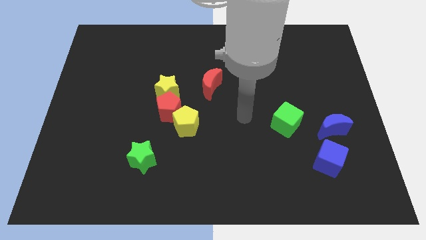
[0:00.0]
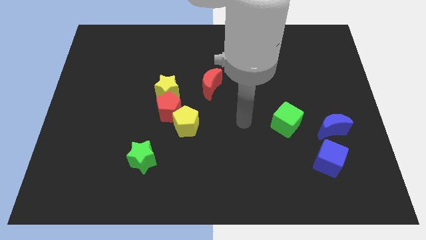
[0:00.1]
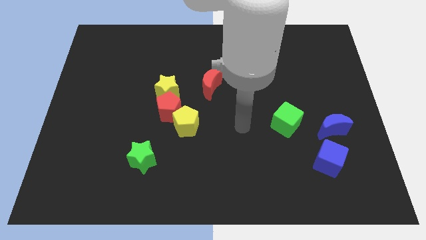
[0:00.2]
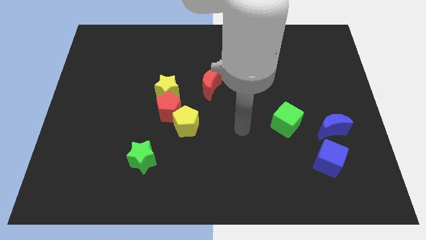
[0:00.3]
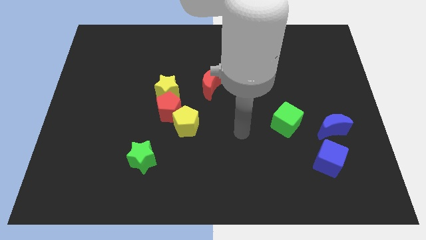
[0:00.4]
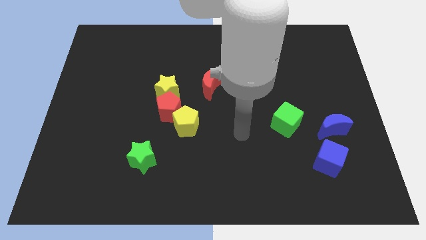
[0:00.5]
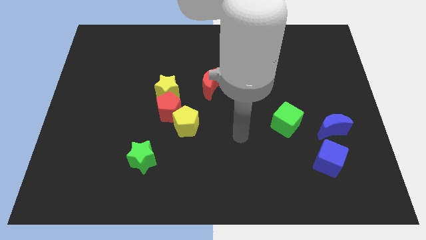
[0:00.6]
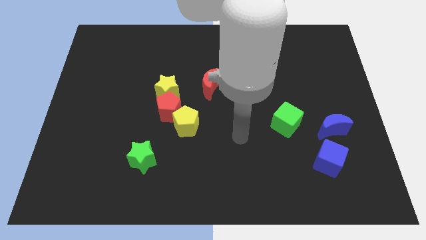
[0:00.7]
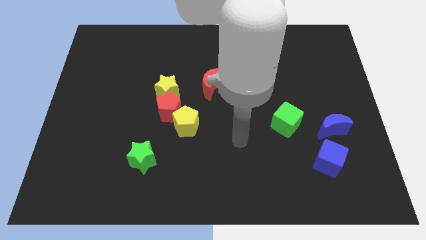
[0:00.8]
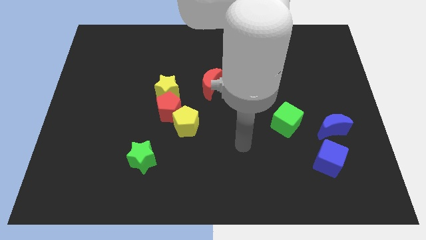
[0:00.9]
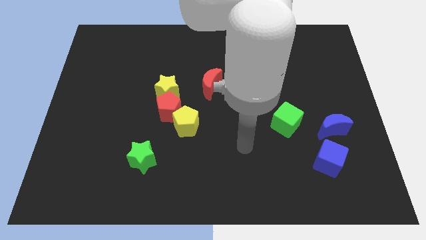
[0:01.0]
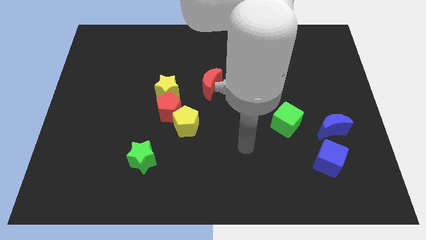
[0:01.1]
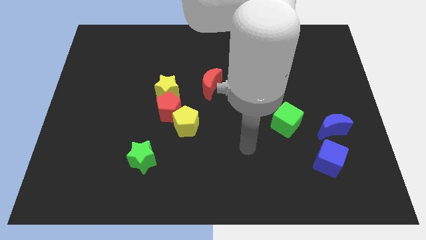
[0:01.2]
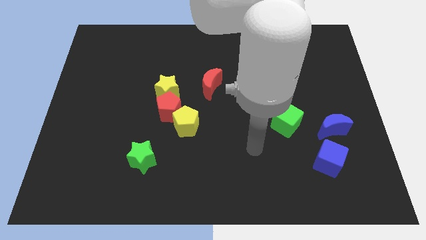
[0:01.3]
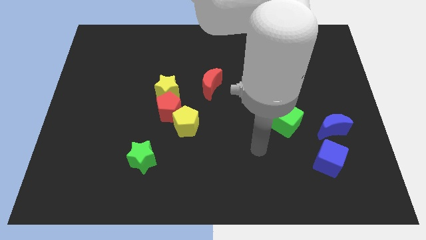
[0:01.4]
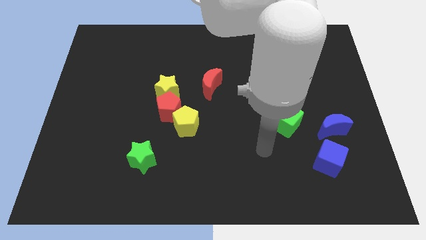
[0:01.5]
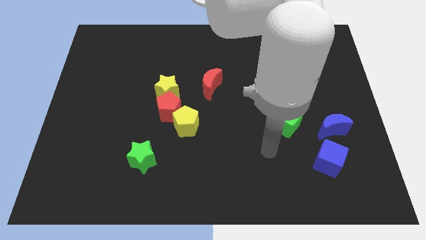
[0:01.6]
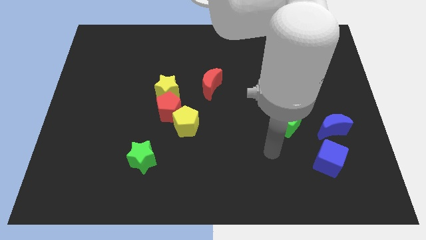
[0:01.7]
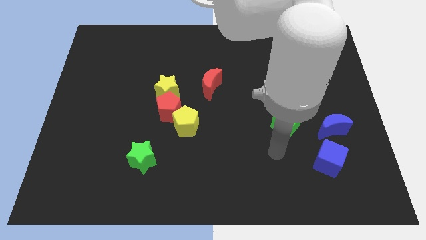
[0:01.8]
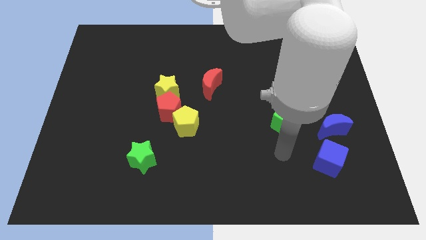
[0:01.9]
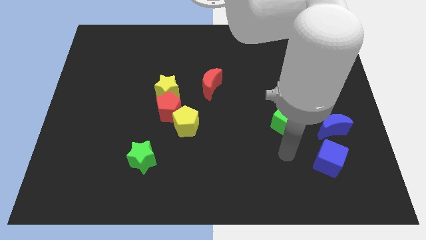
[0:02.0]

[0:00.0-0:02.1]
place your arm at the bottom of the green cube

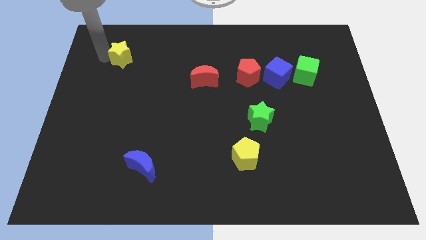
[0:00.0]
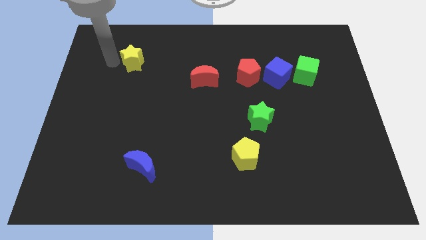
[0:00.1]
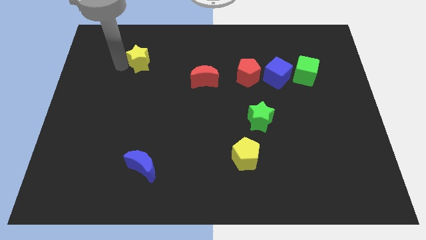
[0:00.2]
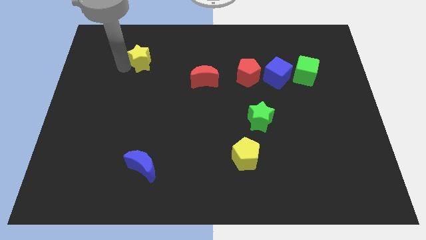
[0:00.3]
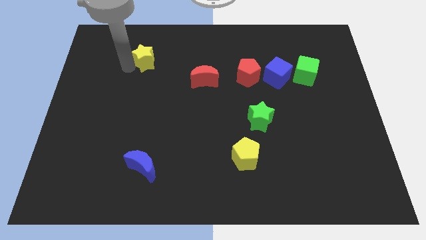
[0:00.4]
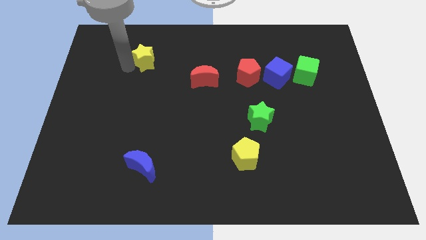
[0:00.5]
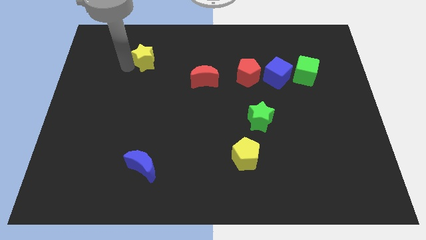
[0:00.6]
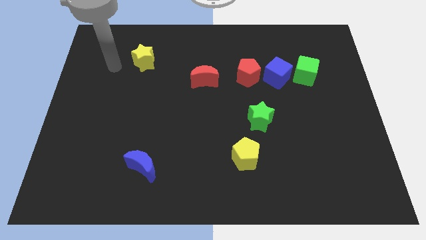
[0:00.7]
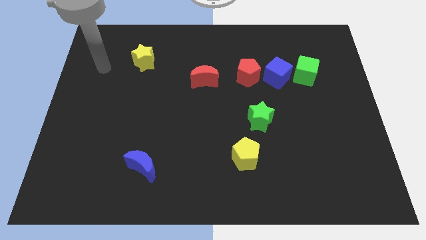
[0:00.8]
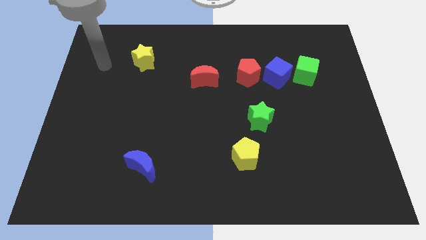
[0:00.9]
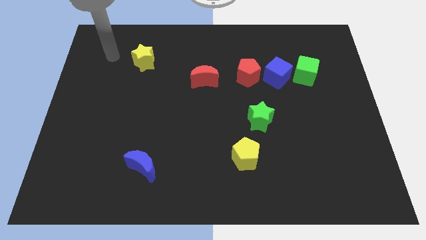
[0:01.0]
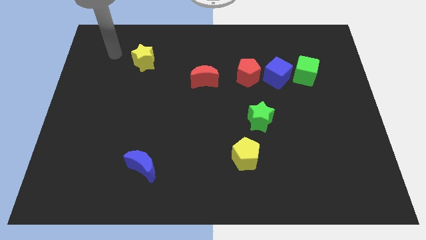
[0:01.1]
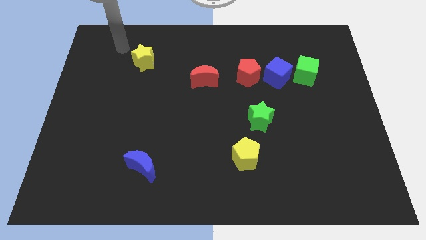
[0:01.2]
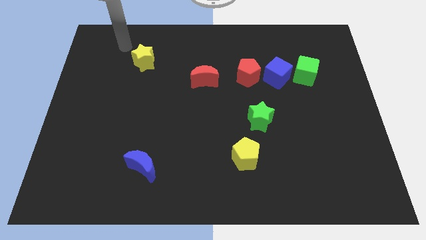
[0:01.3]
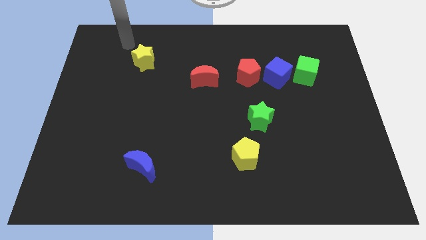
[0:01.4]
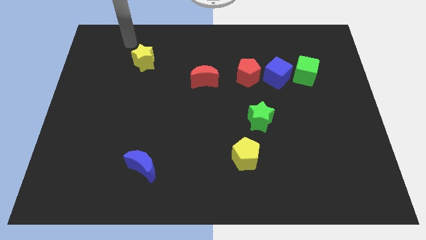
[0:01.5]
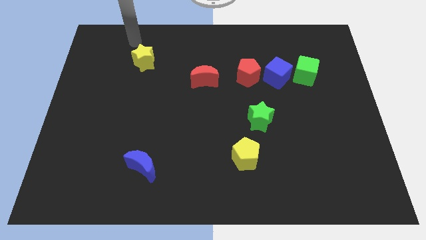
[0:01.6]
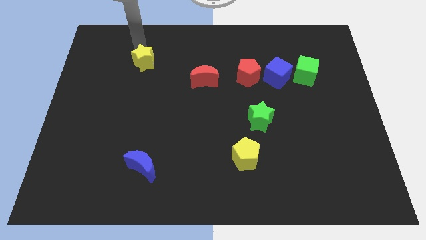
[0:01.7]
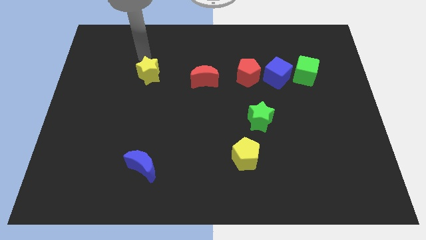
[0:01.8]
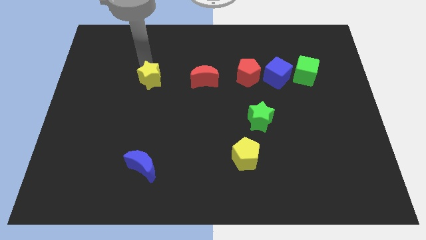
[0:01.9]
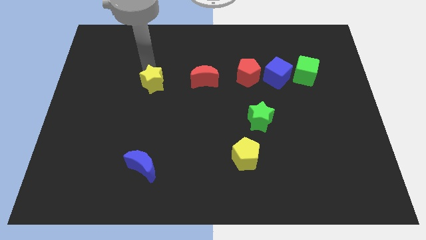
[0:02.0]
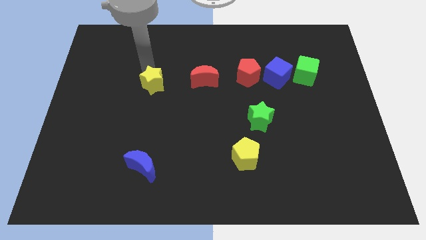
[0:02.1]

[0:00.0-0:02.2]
move the yellow star parallel left to the red crescent

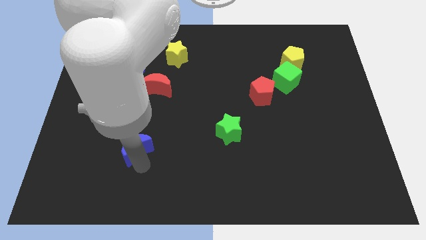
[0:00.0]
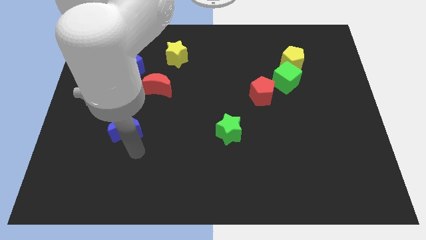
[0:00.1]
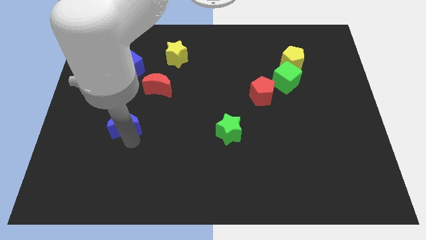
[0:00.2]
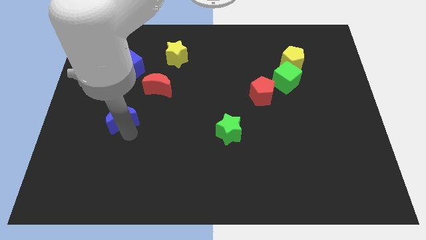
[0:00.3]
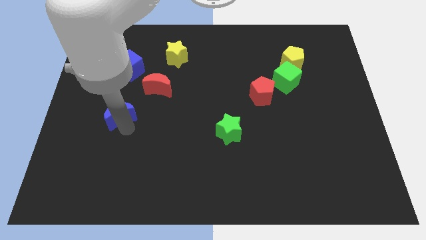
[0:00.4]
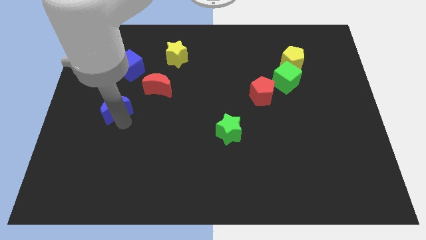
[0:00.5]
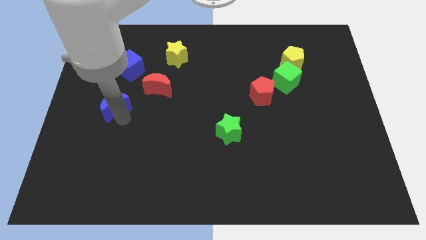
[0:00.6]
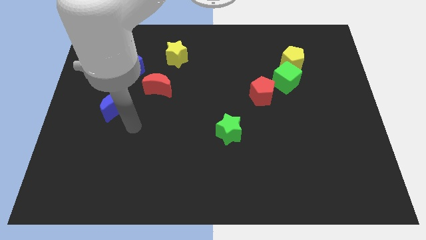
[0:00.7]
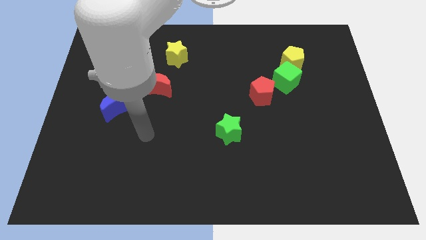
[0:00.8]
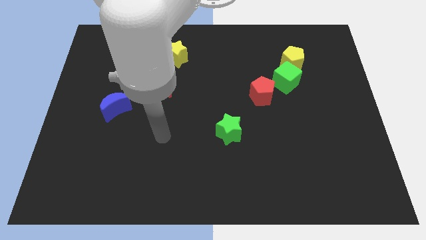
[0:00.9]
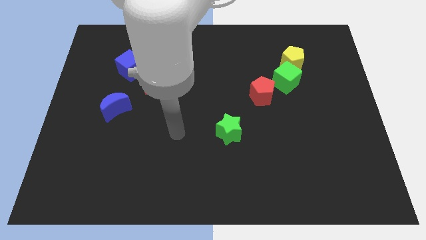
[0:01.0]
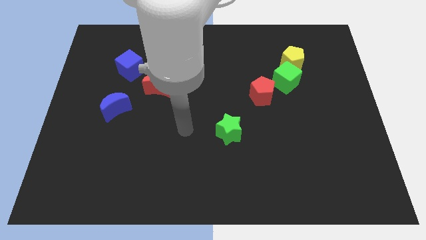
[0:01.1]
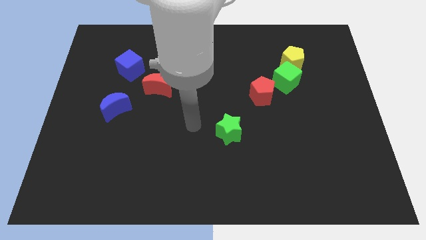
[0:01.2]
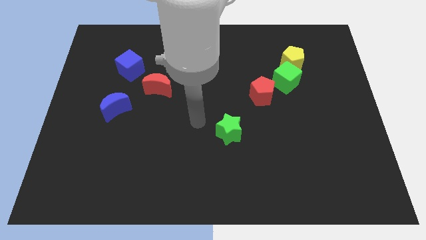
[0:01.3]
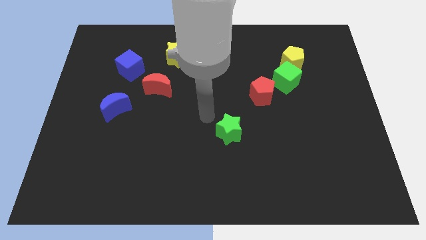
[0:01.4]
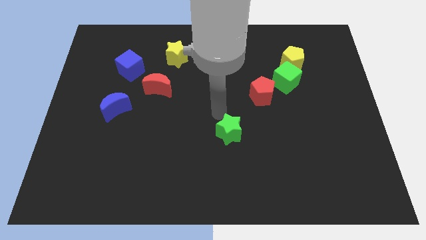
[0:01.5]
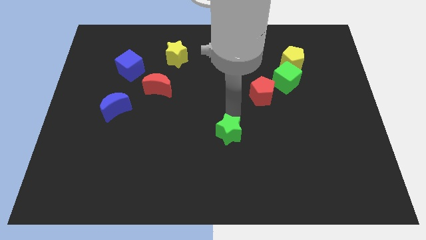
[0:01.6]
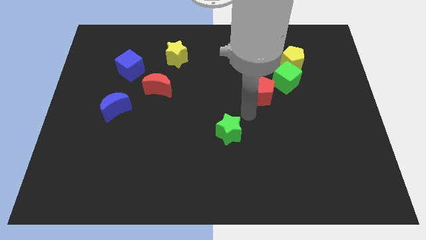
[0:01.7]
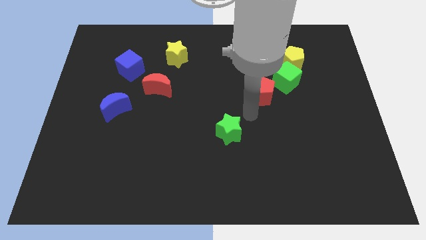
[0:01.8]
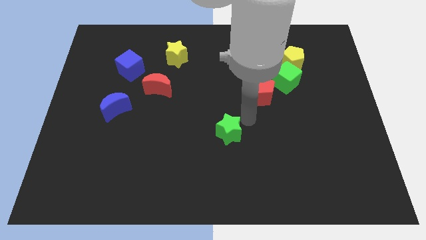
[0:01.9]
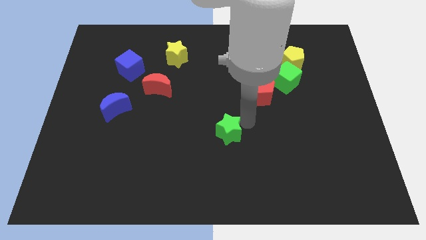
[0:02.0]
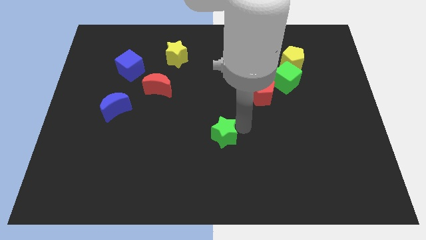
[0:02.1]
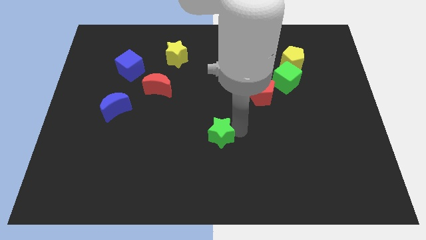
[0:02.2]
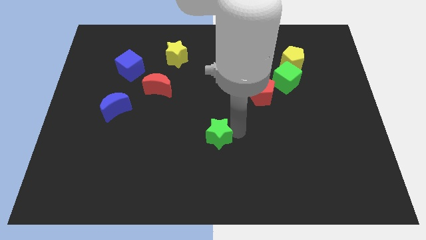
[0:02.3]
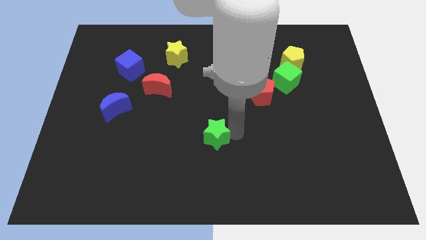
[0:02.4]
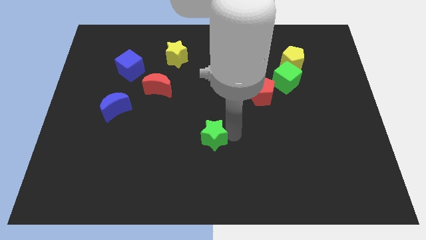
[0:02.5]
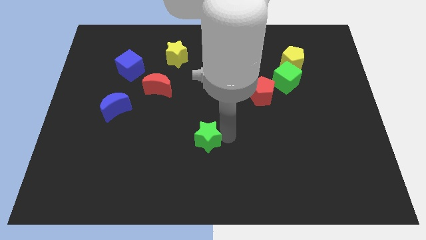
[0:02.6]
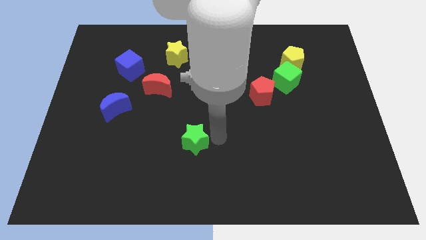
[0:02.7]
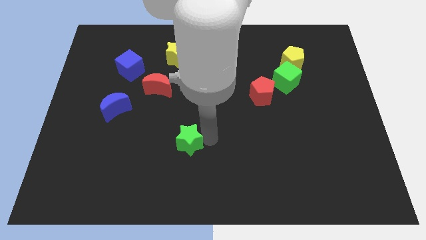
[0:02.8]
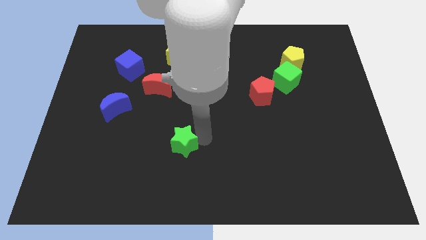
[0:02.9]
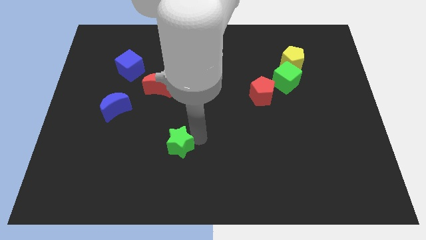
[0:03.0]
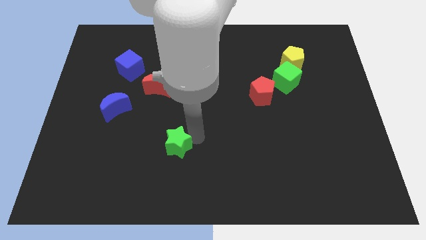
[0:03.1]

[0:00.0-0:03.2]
slightly push the green star to the bottom left

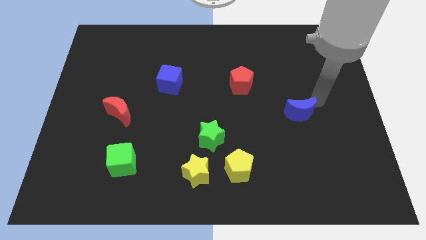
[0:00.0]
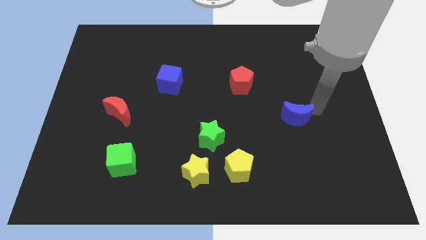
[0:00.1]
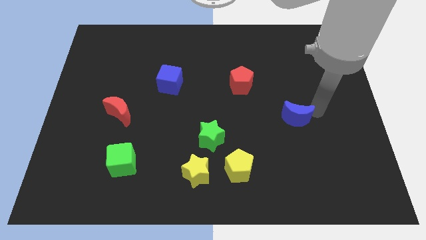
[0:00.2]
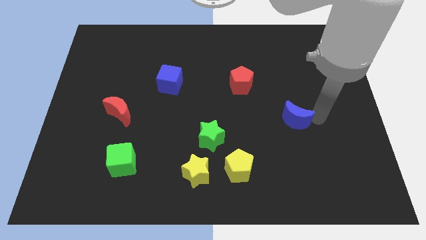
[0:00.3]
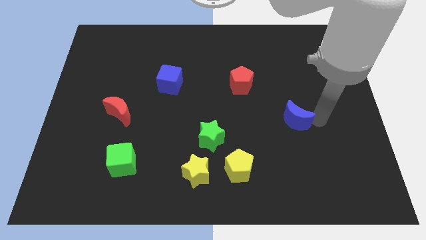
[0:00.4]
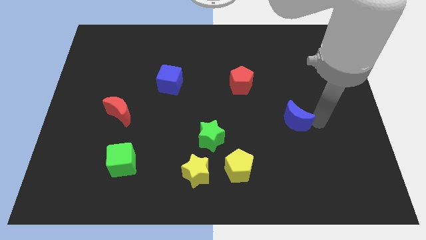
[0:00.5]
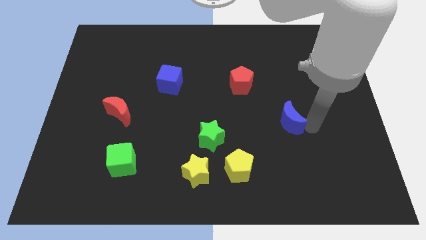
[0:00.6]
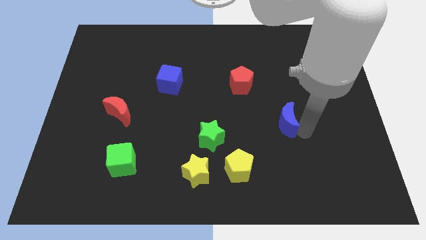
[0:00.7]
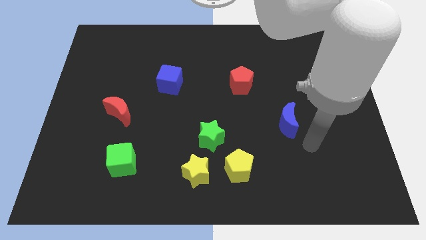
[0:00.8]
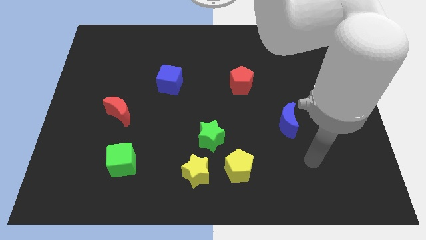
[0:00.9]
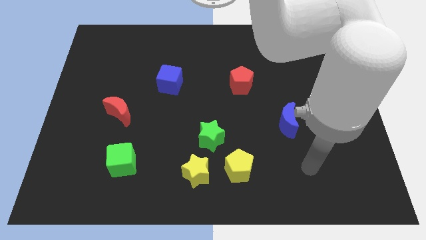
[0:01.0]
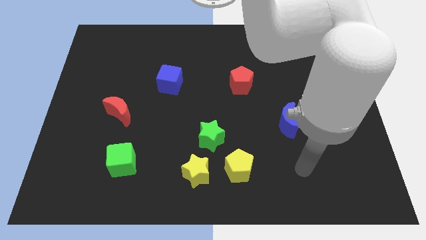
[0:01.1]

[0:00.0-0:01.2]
place the blue cube to the right of green star

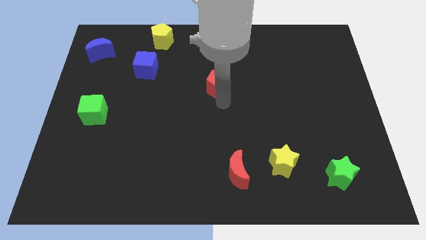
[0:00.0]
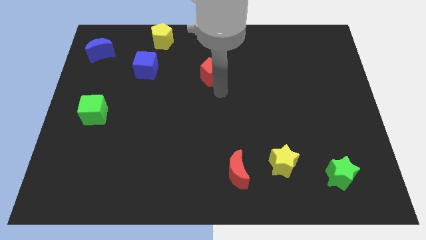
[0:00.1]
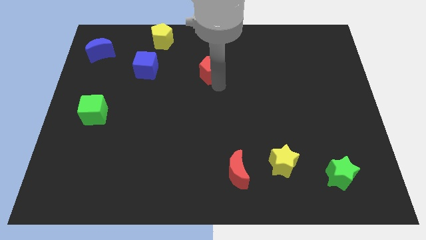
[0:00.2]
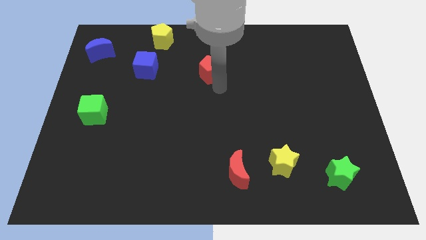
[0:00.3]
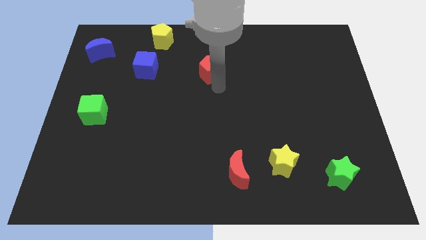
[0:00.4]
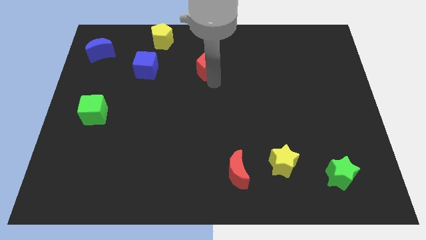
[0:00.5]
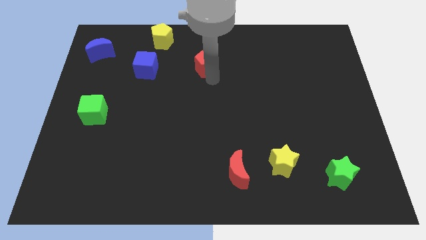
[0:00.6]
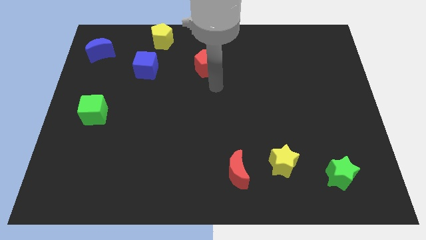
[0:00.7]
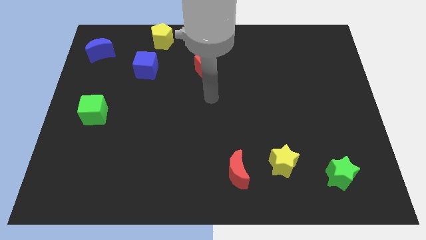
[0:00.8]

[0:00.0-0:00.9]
push the red pentagon diagonally to yellow pentagon
